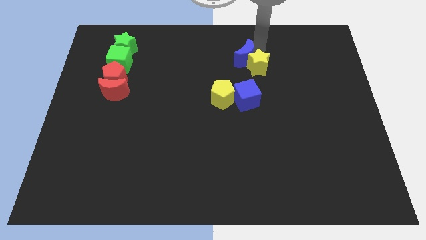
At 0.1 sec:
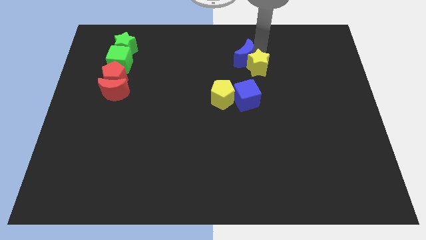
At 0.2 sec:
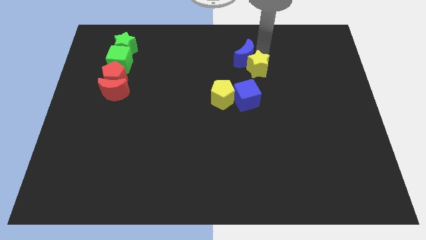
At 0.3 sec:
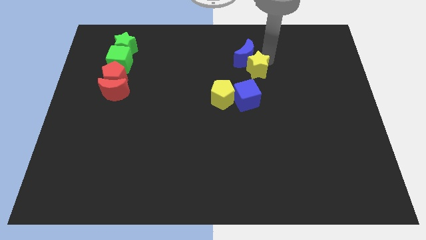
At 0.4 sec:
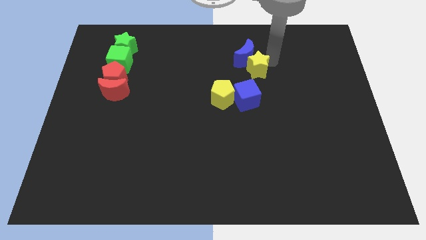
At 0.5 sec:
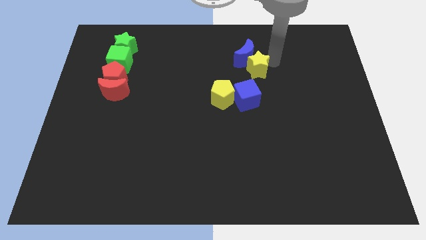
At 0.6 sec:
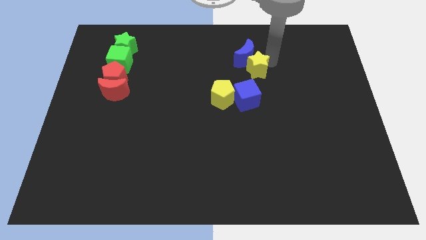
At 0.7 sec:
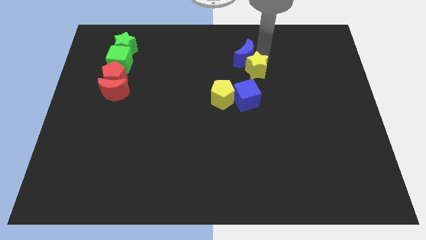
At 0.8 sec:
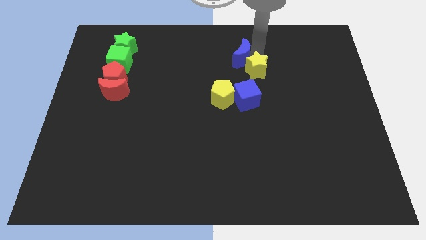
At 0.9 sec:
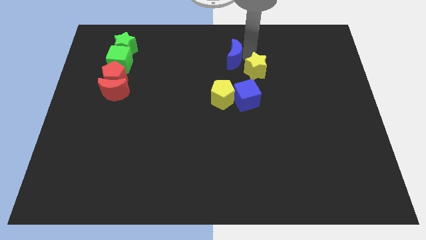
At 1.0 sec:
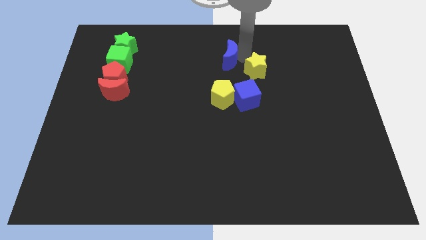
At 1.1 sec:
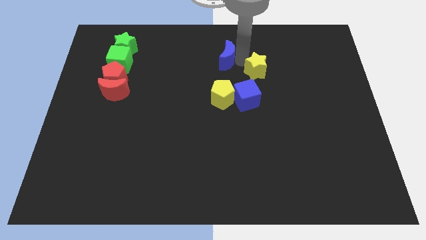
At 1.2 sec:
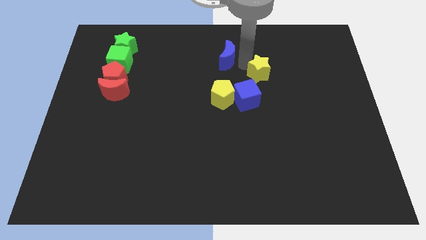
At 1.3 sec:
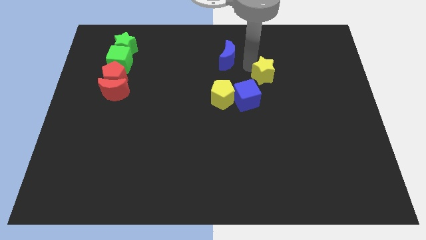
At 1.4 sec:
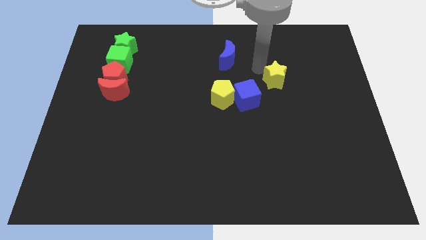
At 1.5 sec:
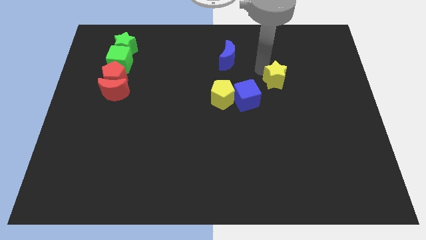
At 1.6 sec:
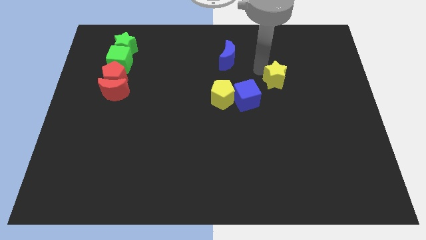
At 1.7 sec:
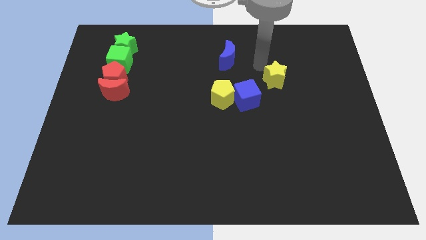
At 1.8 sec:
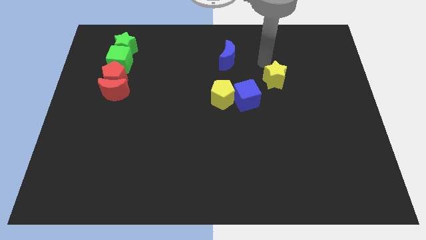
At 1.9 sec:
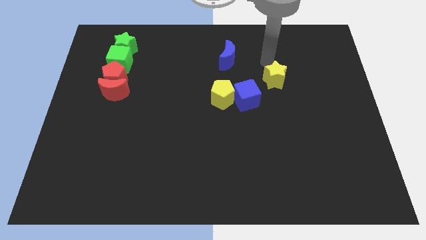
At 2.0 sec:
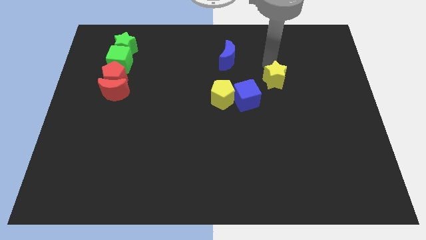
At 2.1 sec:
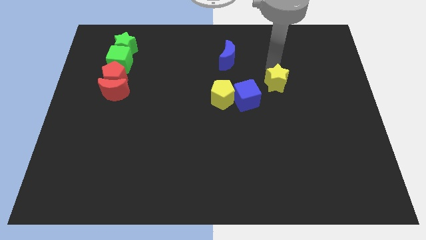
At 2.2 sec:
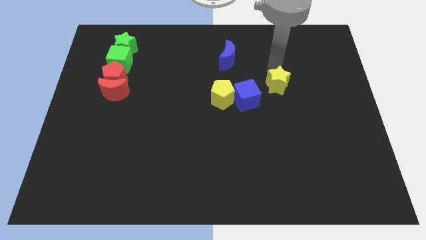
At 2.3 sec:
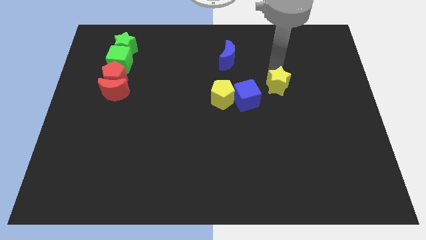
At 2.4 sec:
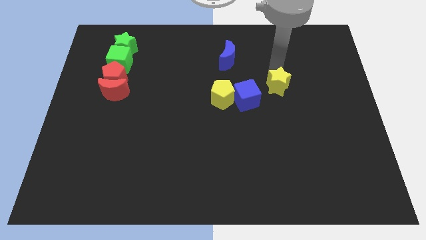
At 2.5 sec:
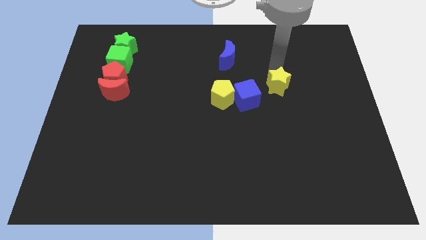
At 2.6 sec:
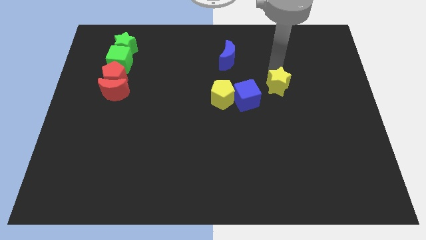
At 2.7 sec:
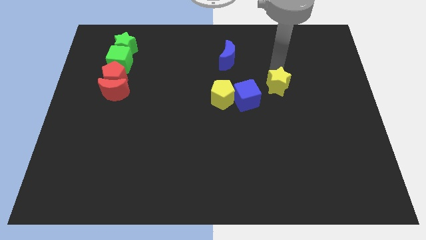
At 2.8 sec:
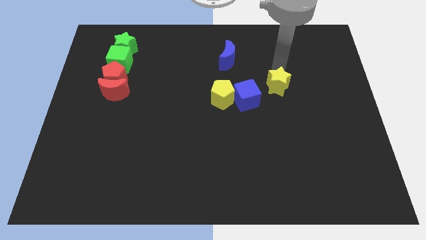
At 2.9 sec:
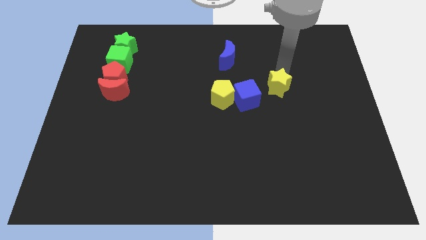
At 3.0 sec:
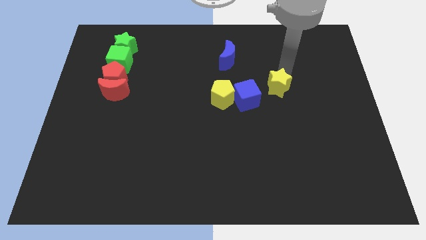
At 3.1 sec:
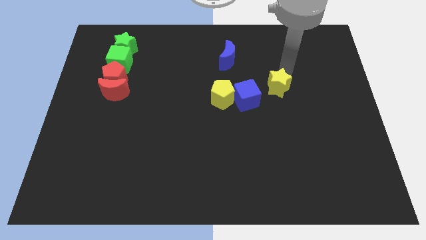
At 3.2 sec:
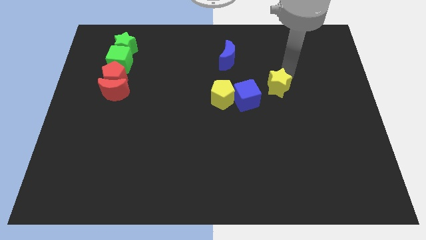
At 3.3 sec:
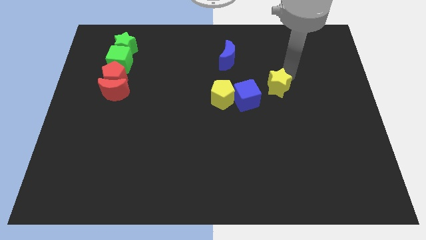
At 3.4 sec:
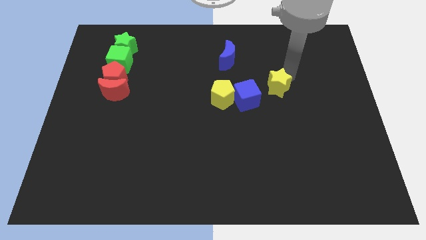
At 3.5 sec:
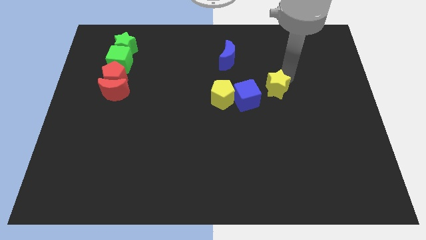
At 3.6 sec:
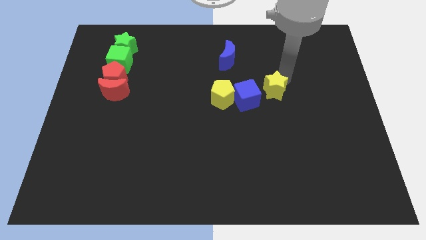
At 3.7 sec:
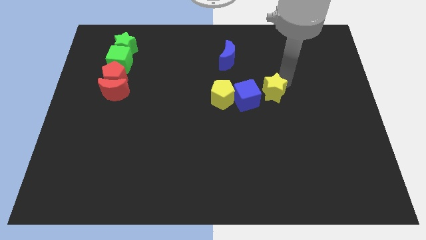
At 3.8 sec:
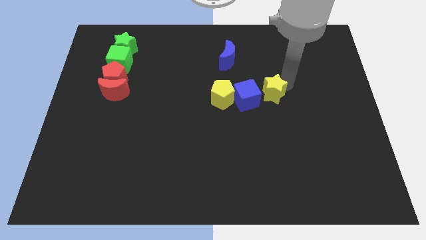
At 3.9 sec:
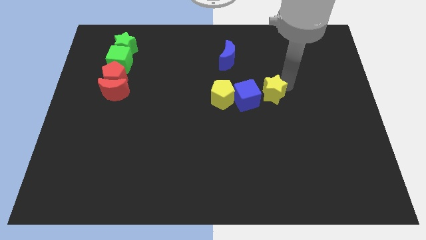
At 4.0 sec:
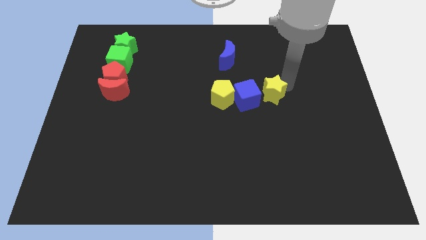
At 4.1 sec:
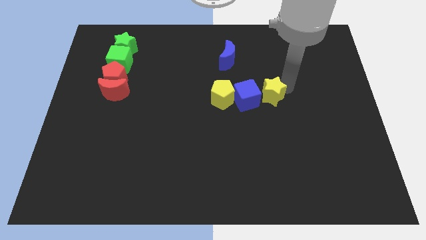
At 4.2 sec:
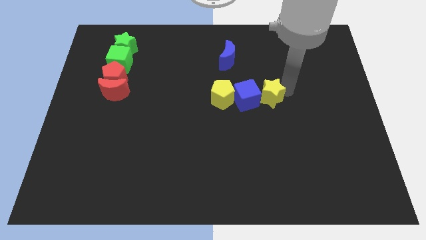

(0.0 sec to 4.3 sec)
place the yellow star in a horizontal line right to the blue cube

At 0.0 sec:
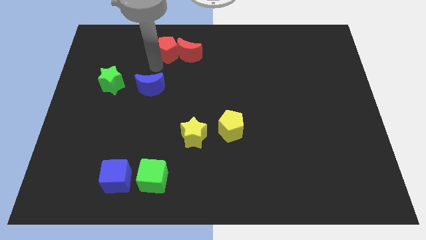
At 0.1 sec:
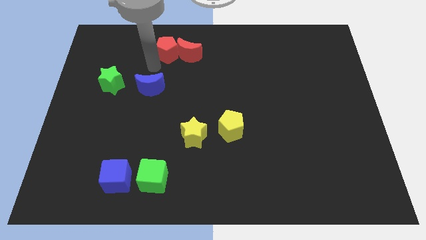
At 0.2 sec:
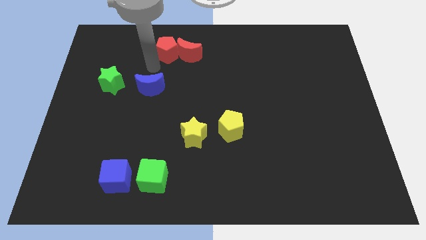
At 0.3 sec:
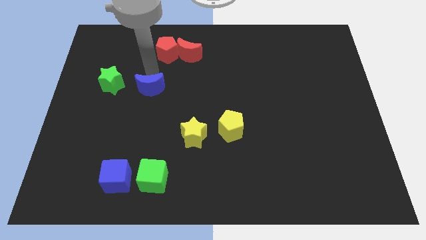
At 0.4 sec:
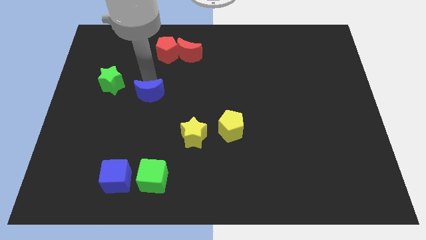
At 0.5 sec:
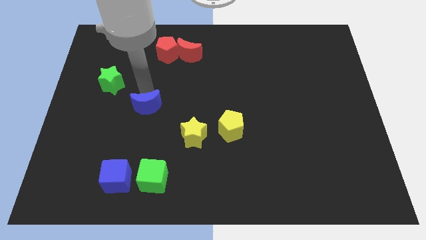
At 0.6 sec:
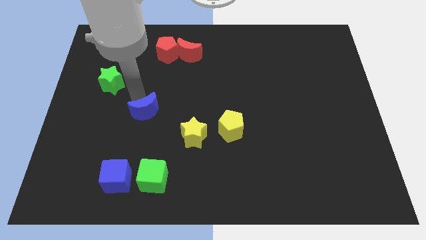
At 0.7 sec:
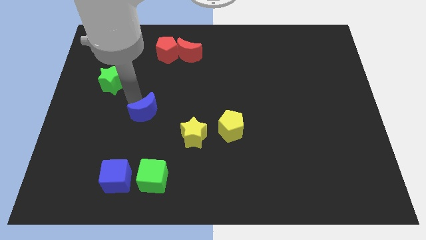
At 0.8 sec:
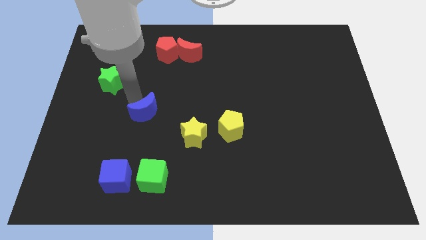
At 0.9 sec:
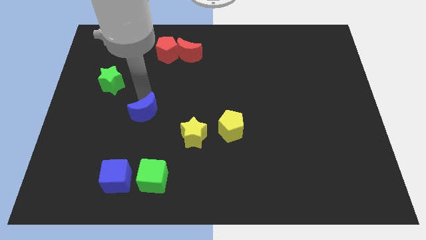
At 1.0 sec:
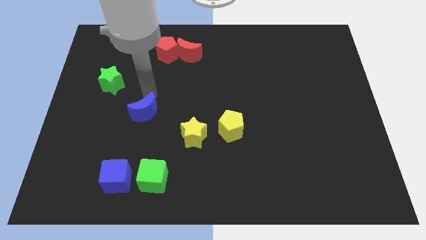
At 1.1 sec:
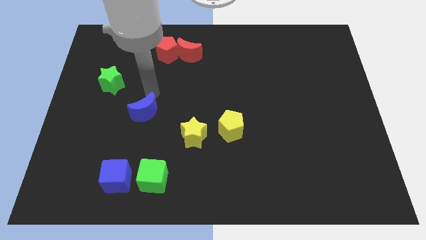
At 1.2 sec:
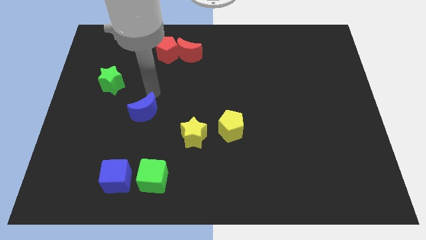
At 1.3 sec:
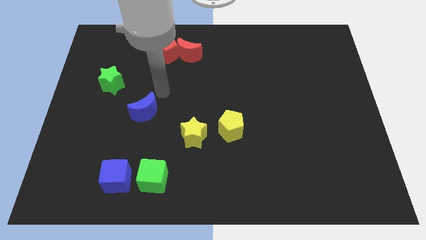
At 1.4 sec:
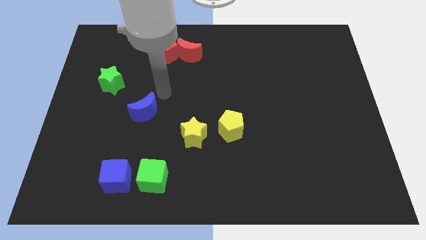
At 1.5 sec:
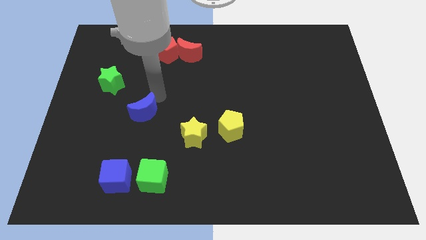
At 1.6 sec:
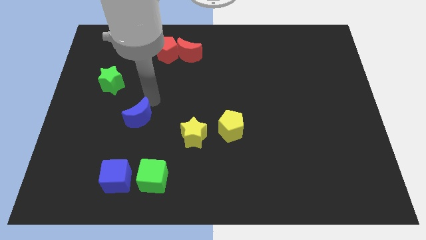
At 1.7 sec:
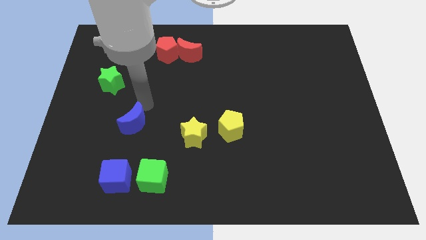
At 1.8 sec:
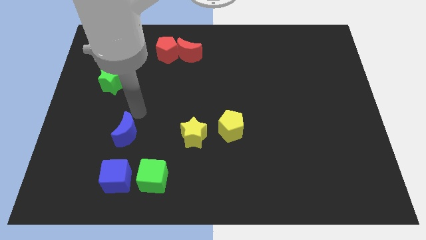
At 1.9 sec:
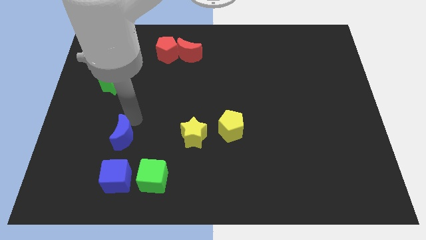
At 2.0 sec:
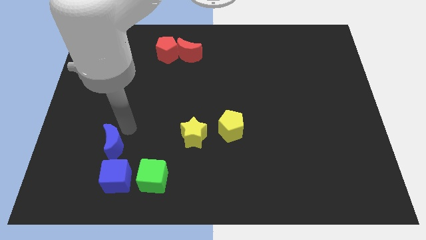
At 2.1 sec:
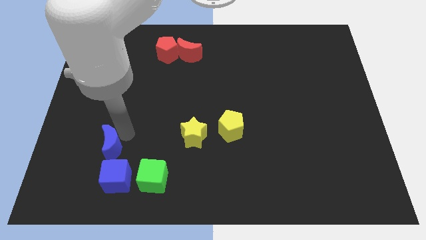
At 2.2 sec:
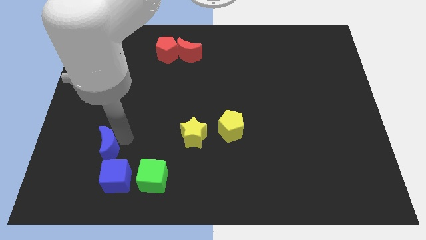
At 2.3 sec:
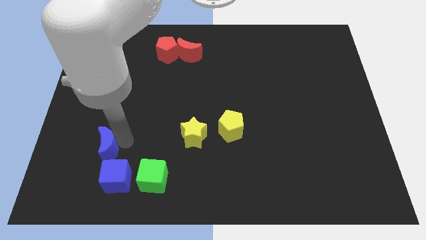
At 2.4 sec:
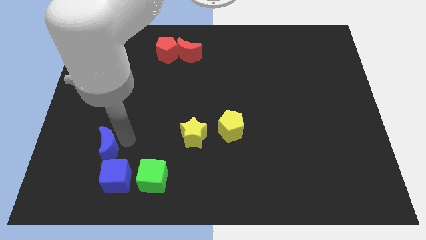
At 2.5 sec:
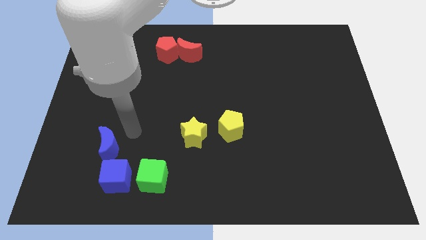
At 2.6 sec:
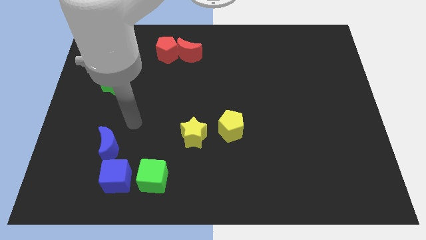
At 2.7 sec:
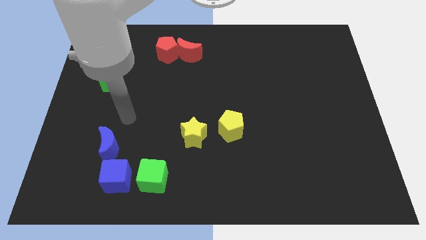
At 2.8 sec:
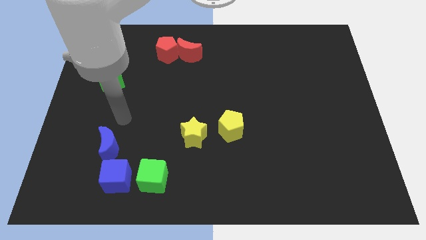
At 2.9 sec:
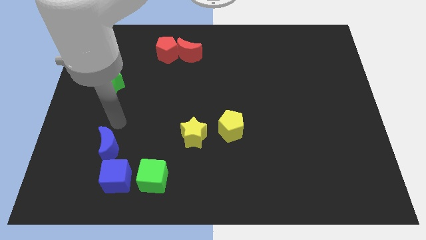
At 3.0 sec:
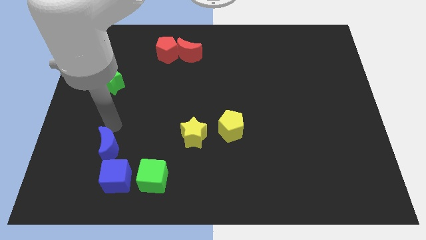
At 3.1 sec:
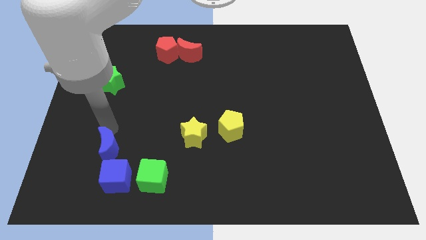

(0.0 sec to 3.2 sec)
push the blue crescent above the blue cube

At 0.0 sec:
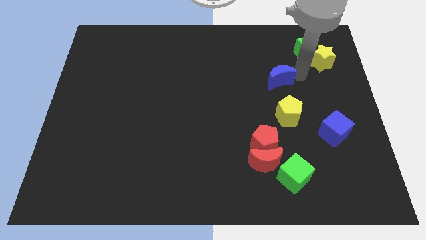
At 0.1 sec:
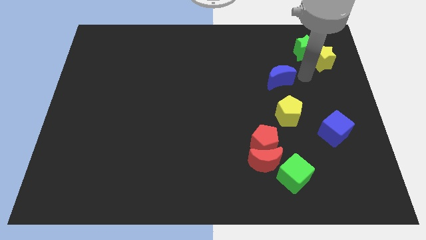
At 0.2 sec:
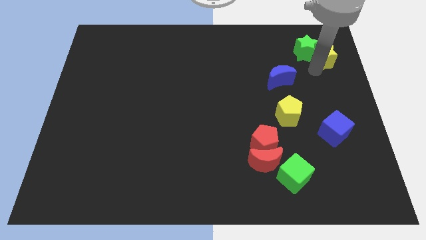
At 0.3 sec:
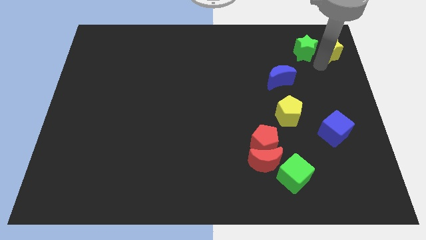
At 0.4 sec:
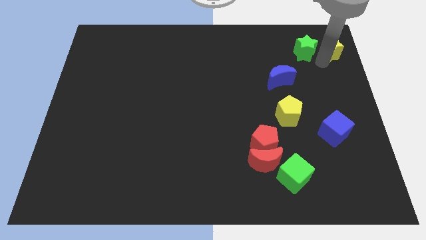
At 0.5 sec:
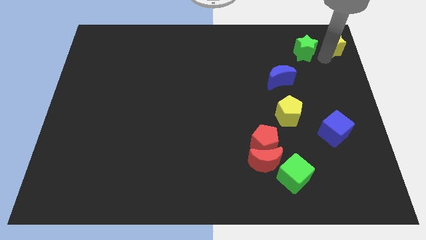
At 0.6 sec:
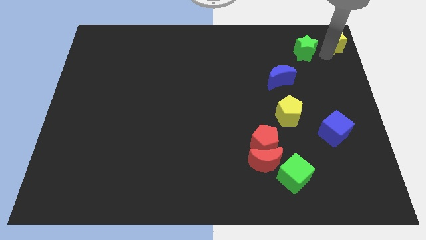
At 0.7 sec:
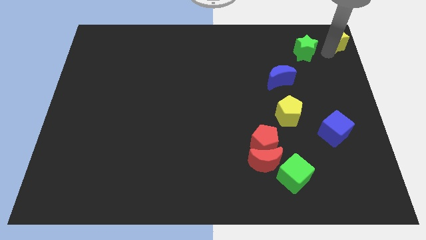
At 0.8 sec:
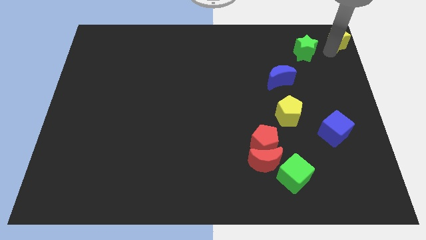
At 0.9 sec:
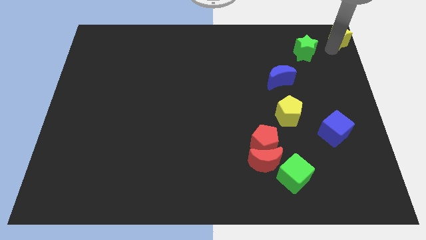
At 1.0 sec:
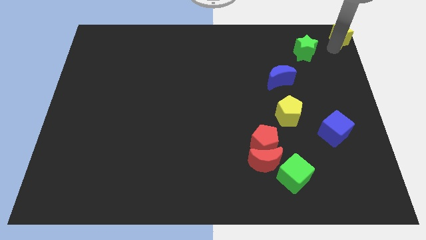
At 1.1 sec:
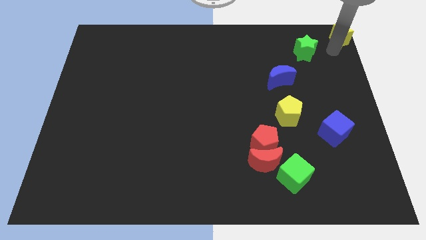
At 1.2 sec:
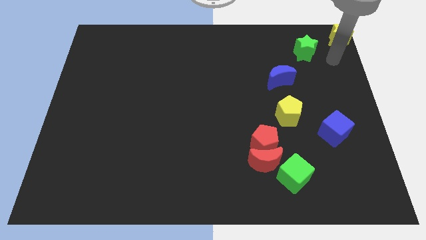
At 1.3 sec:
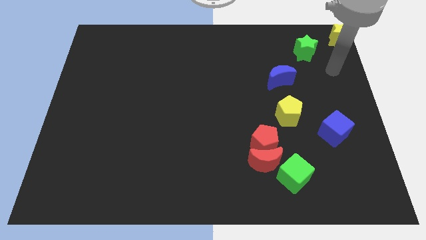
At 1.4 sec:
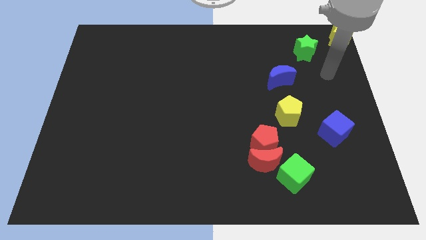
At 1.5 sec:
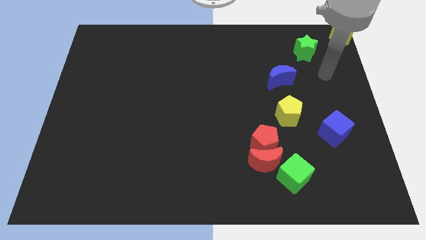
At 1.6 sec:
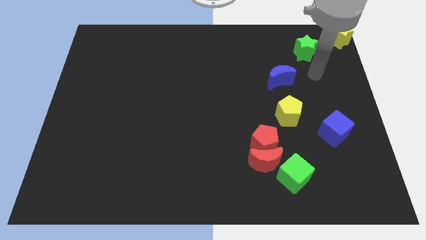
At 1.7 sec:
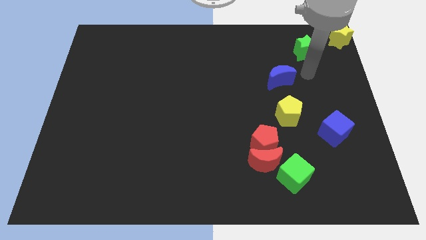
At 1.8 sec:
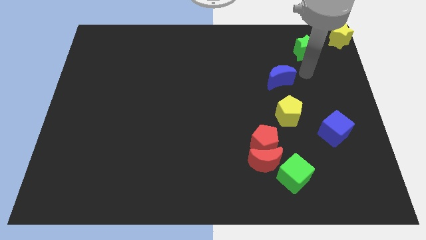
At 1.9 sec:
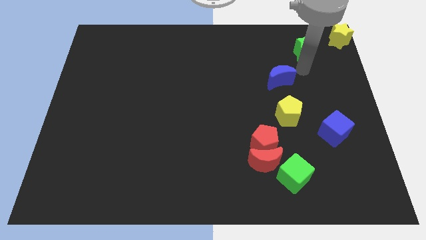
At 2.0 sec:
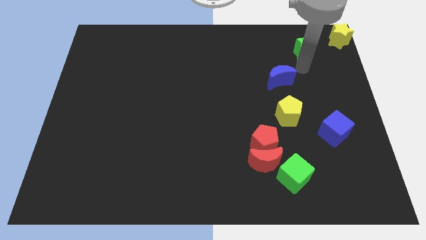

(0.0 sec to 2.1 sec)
drag yellow star to the top right corner
